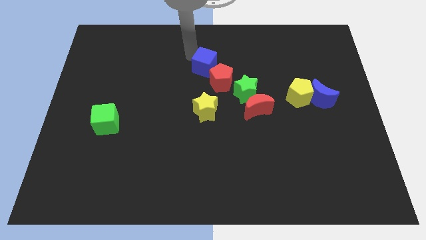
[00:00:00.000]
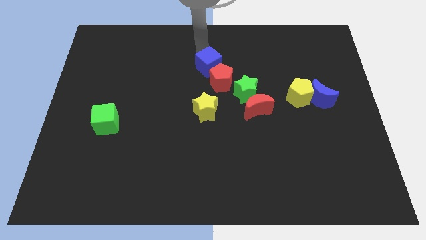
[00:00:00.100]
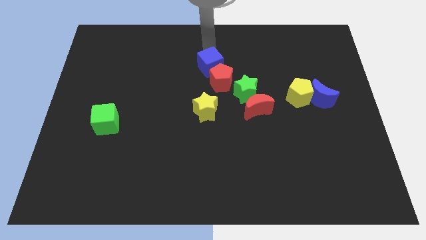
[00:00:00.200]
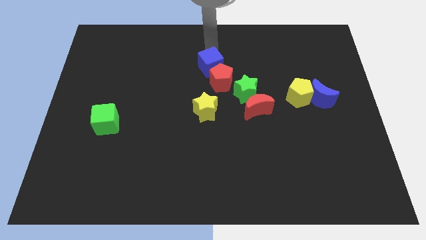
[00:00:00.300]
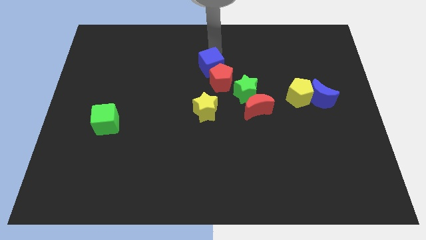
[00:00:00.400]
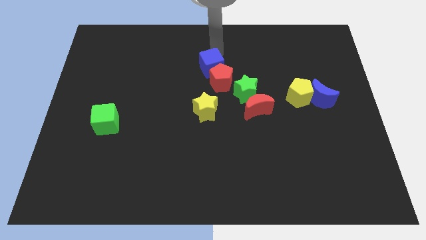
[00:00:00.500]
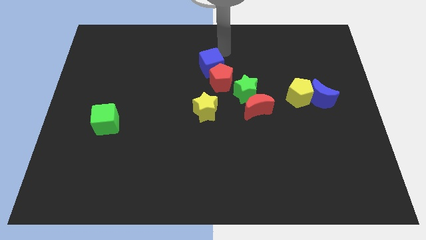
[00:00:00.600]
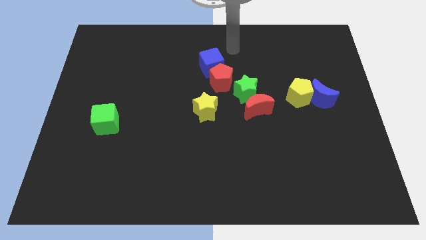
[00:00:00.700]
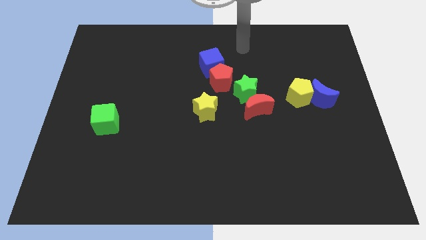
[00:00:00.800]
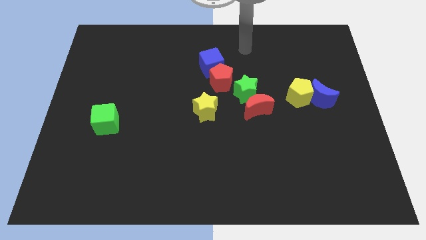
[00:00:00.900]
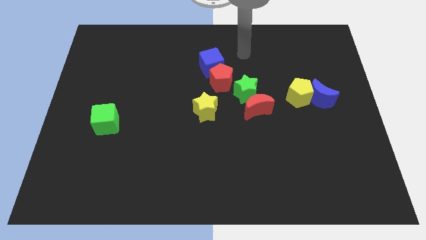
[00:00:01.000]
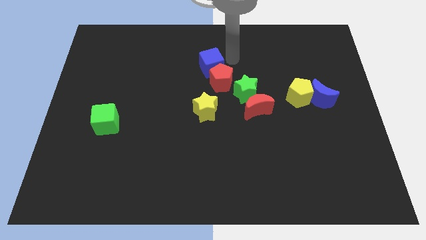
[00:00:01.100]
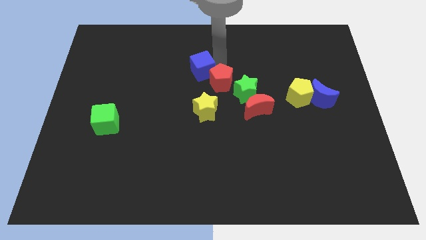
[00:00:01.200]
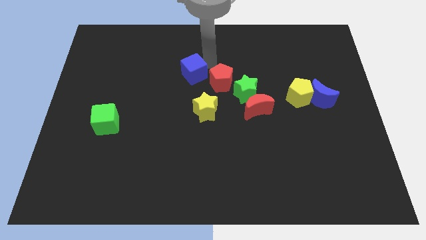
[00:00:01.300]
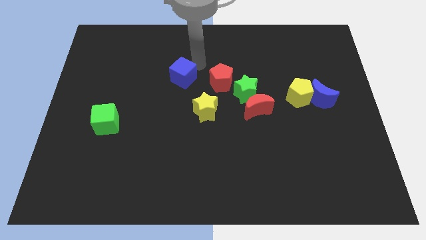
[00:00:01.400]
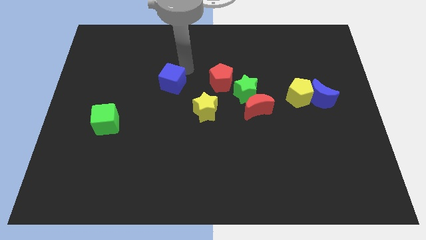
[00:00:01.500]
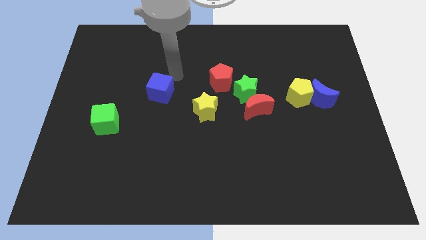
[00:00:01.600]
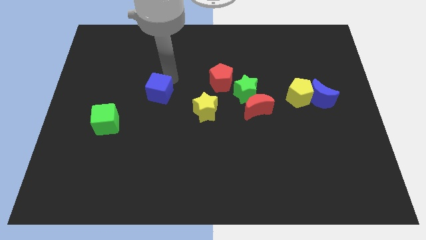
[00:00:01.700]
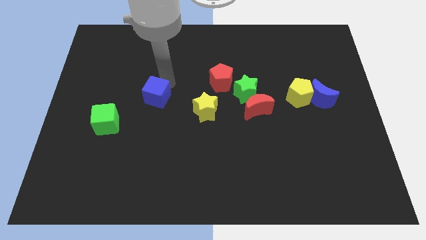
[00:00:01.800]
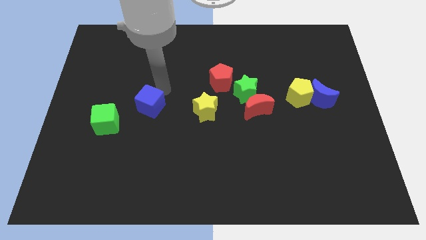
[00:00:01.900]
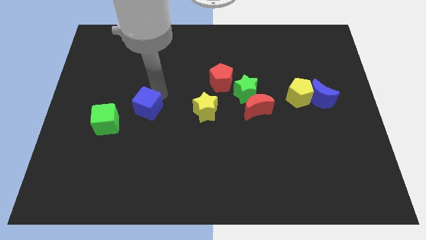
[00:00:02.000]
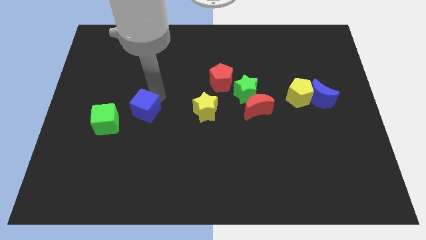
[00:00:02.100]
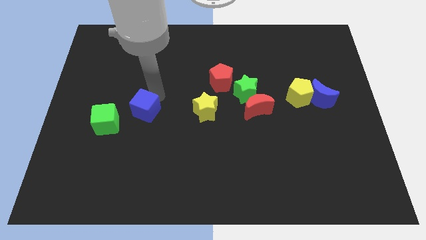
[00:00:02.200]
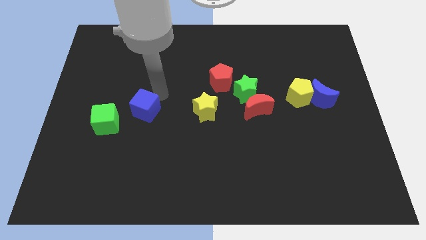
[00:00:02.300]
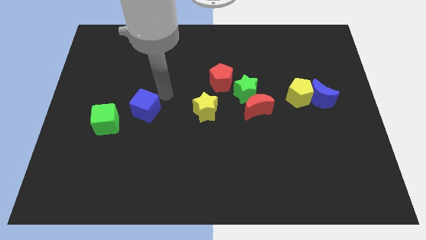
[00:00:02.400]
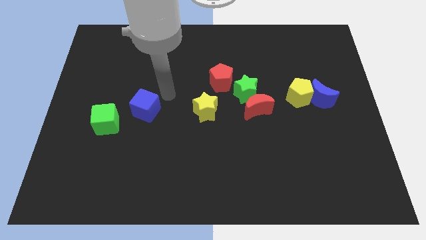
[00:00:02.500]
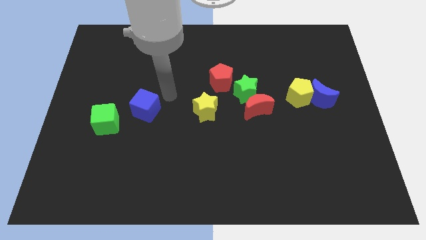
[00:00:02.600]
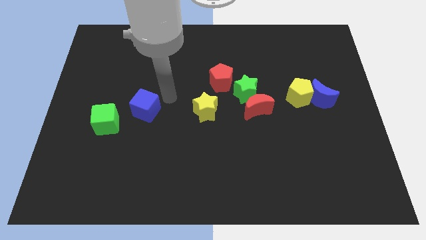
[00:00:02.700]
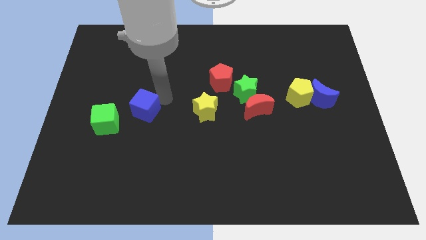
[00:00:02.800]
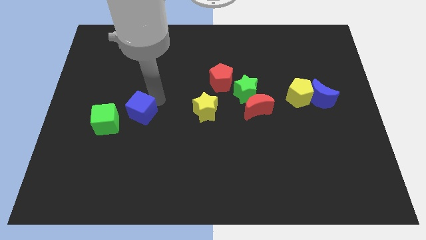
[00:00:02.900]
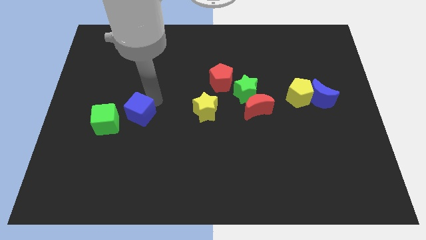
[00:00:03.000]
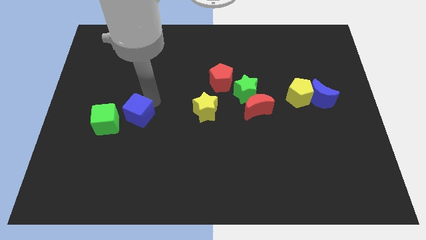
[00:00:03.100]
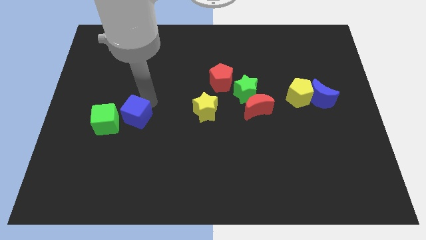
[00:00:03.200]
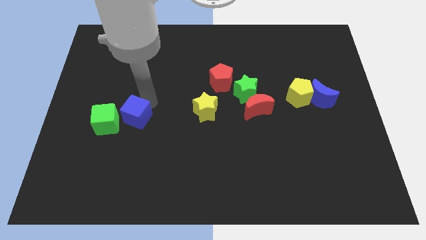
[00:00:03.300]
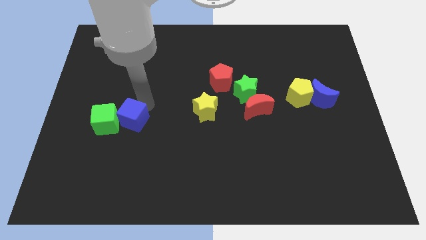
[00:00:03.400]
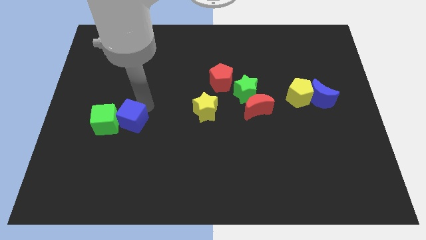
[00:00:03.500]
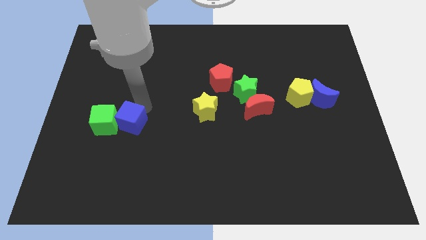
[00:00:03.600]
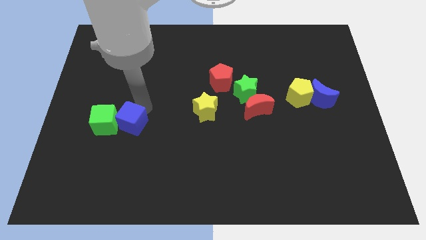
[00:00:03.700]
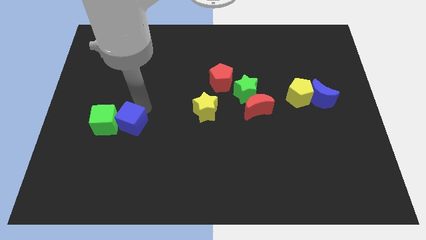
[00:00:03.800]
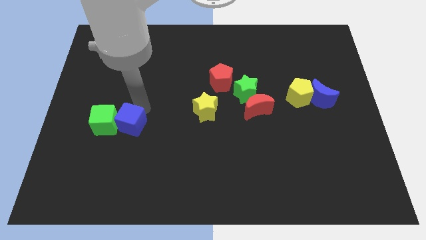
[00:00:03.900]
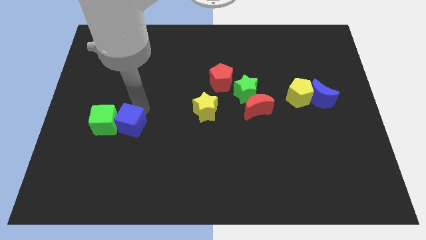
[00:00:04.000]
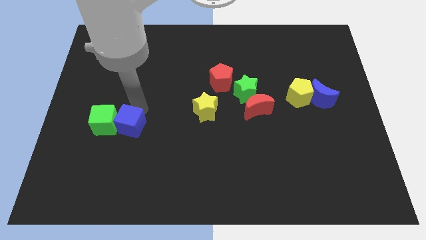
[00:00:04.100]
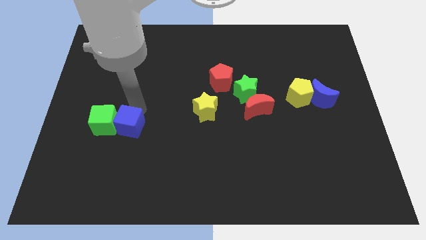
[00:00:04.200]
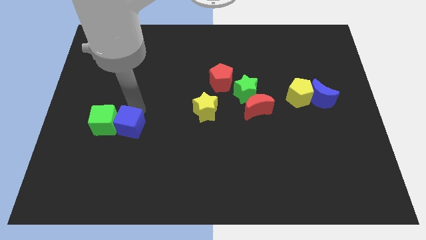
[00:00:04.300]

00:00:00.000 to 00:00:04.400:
push the blue cube into the green cube

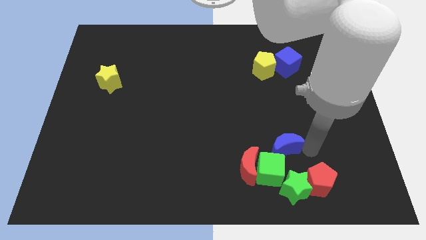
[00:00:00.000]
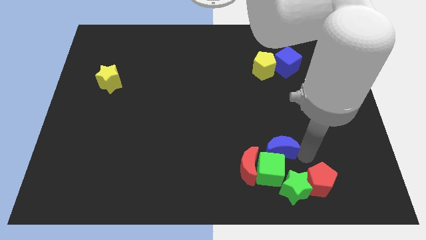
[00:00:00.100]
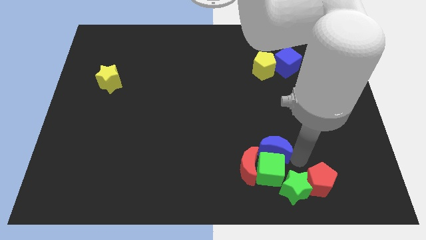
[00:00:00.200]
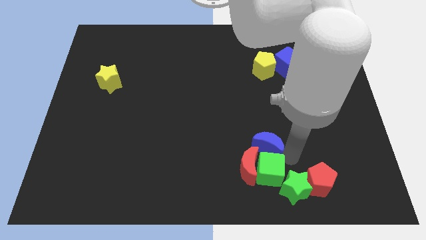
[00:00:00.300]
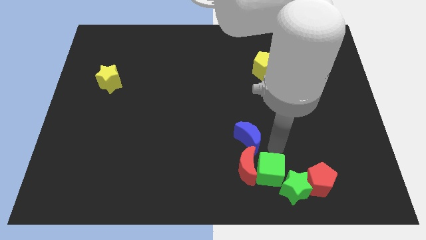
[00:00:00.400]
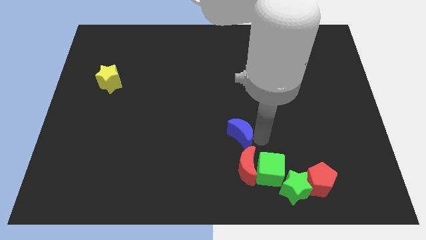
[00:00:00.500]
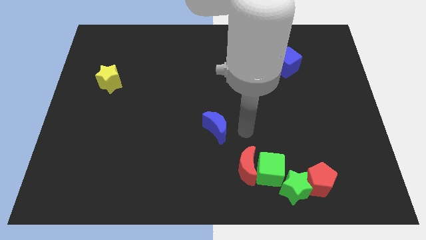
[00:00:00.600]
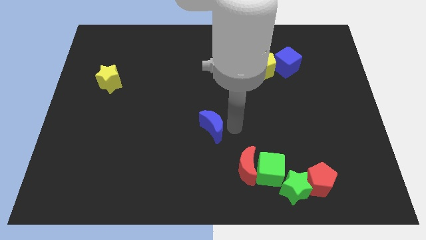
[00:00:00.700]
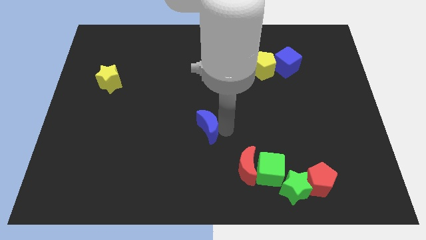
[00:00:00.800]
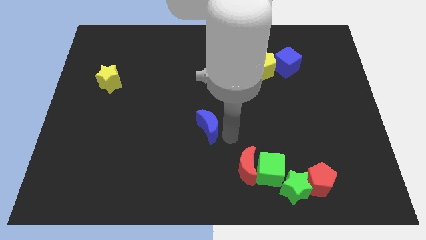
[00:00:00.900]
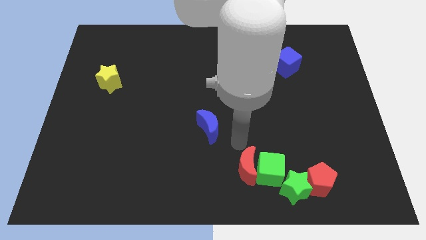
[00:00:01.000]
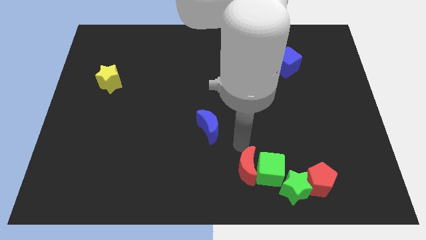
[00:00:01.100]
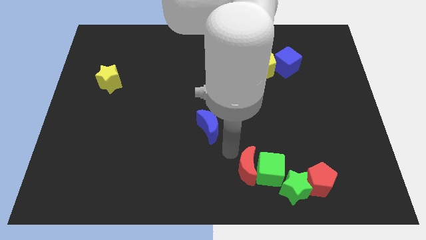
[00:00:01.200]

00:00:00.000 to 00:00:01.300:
put the blue crescent diagonally to the top left of the red moon

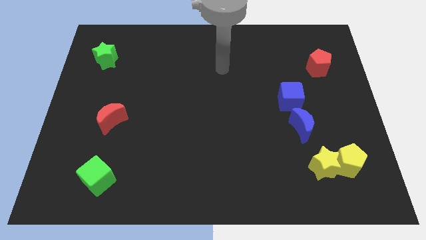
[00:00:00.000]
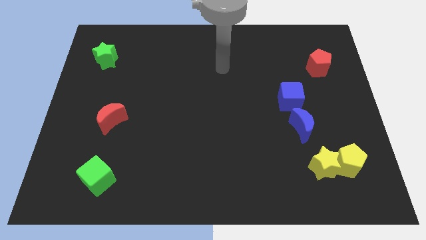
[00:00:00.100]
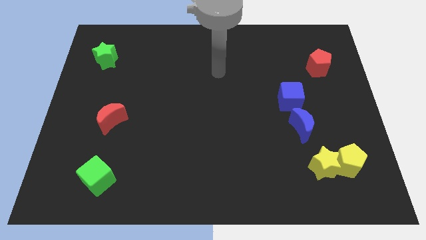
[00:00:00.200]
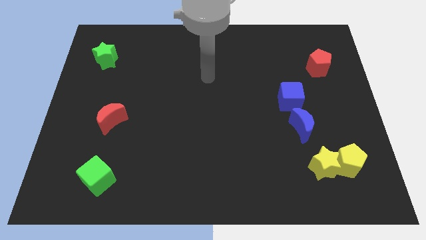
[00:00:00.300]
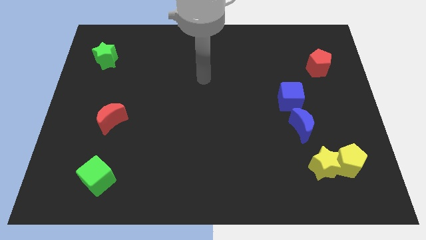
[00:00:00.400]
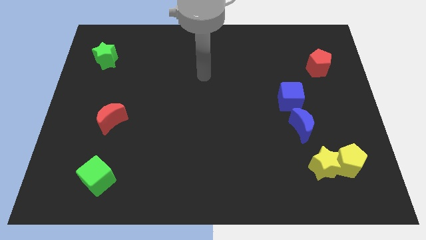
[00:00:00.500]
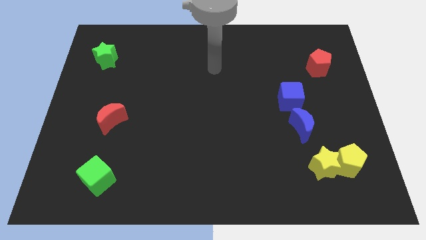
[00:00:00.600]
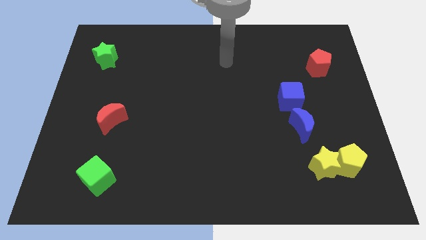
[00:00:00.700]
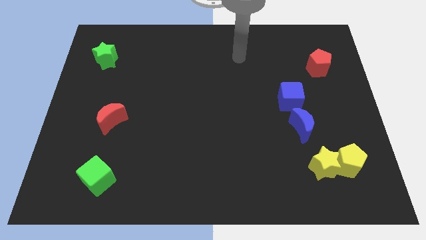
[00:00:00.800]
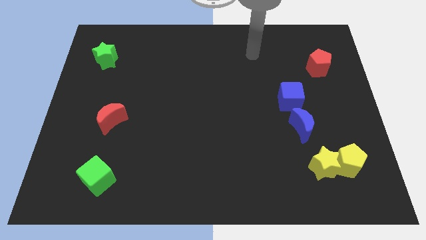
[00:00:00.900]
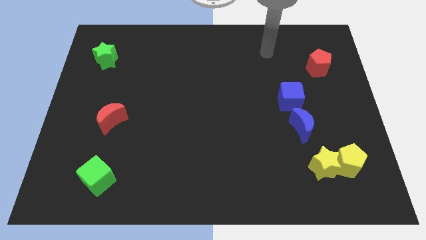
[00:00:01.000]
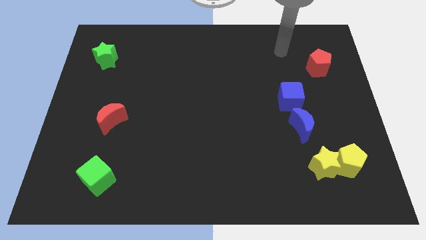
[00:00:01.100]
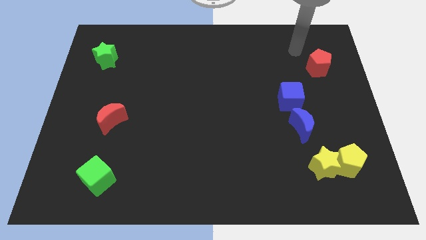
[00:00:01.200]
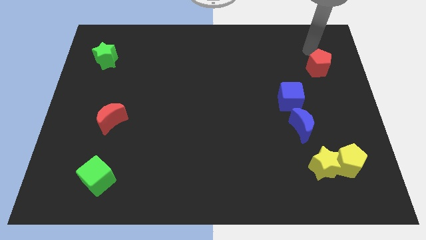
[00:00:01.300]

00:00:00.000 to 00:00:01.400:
point the arm above the red pentagon

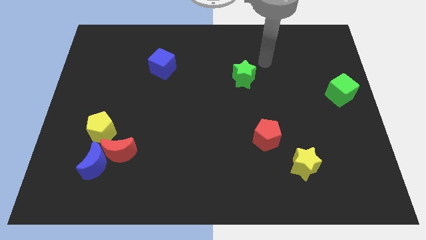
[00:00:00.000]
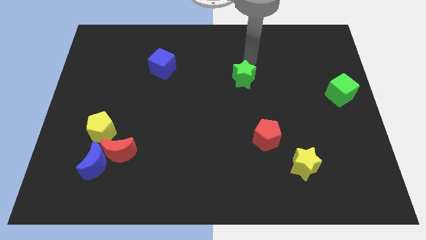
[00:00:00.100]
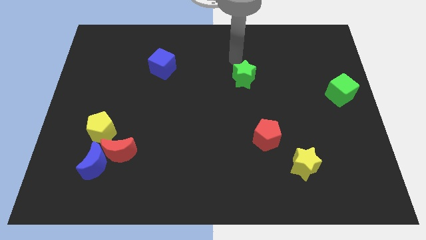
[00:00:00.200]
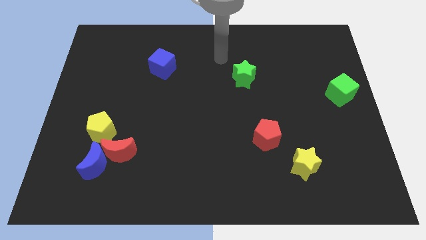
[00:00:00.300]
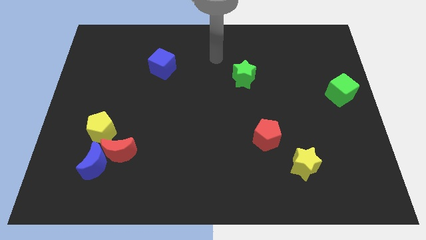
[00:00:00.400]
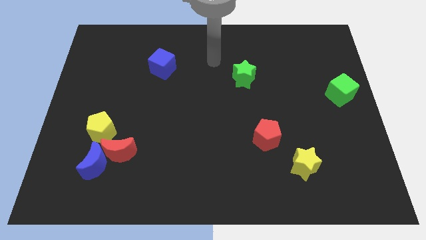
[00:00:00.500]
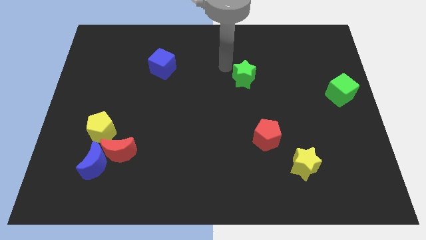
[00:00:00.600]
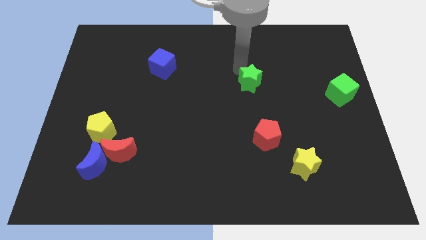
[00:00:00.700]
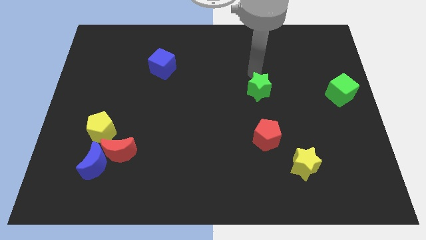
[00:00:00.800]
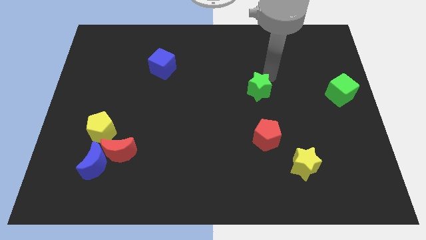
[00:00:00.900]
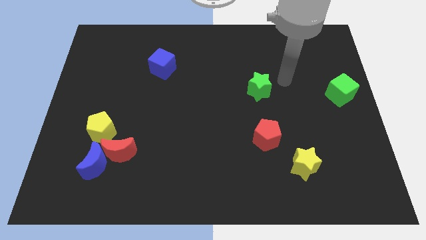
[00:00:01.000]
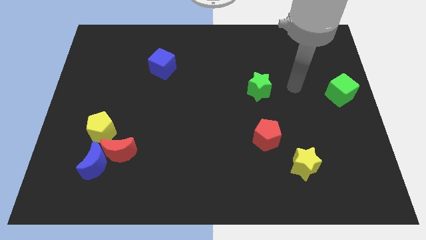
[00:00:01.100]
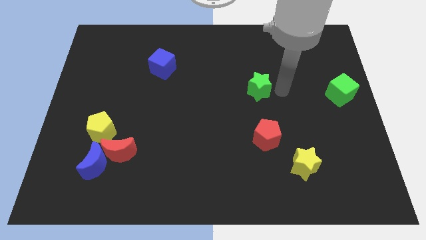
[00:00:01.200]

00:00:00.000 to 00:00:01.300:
place green star to the top of red pentagon

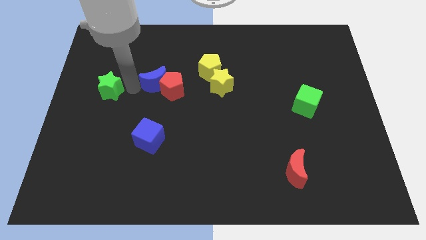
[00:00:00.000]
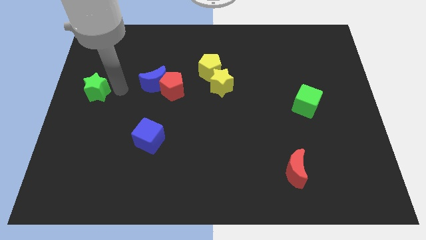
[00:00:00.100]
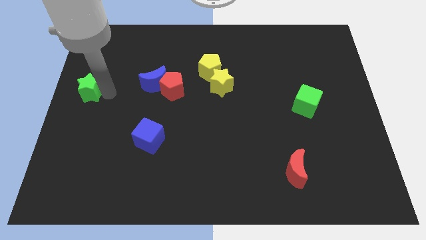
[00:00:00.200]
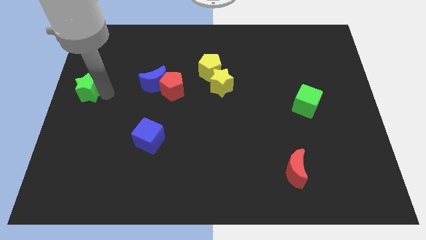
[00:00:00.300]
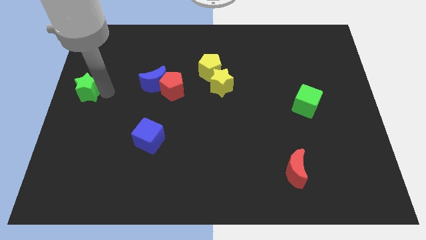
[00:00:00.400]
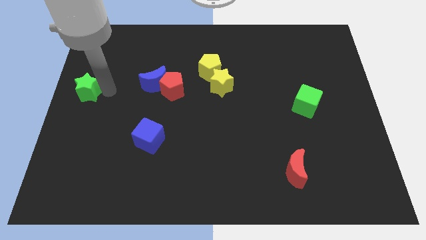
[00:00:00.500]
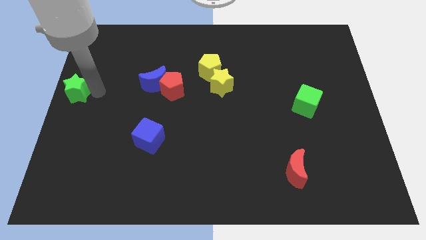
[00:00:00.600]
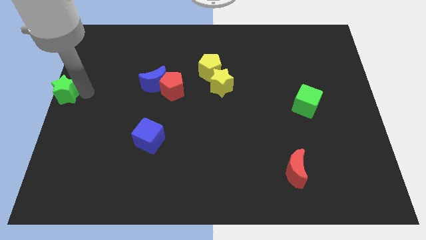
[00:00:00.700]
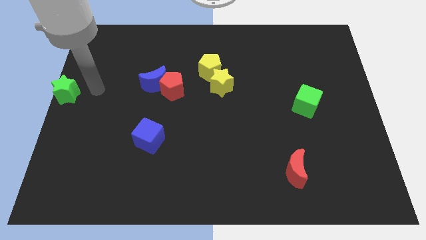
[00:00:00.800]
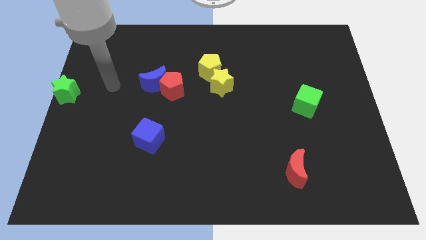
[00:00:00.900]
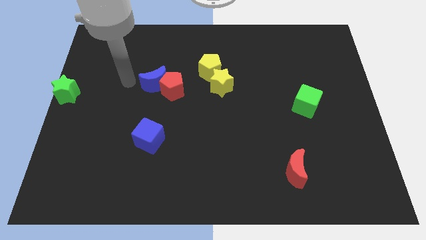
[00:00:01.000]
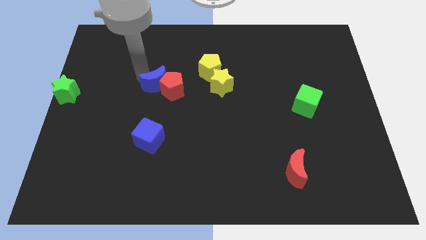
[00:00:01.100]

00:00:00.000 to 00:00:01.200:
place the green star to the left center of the board
